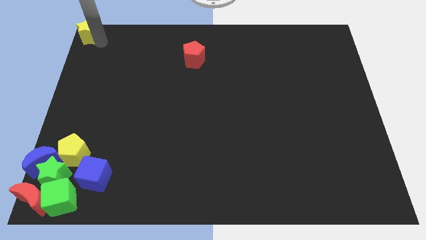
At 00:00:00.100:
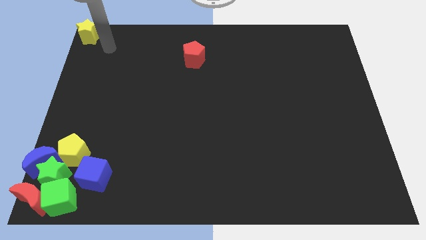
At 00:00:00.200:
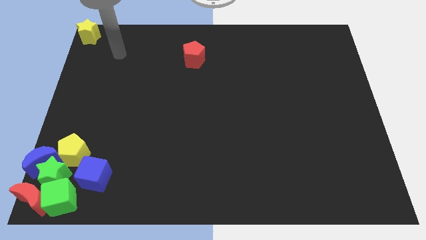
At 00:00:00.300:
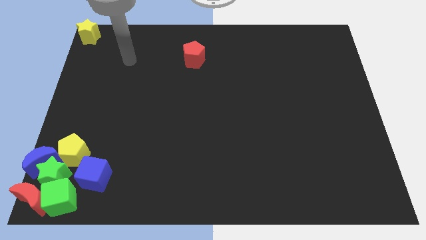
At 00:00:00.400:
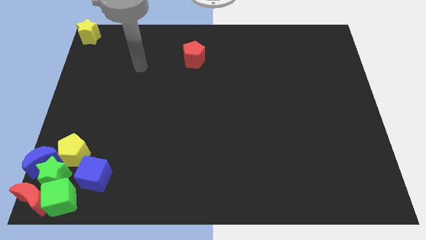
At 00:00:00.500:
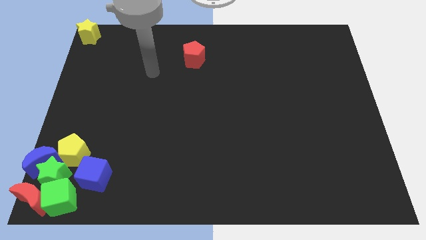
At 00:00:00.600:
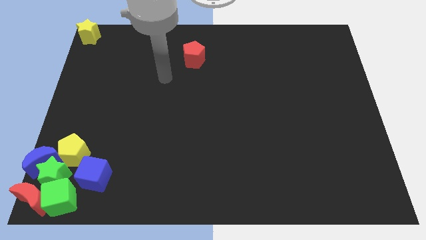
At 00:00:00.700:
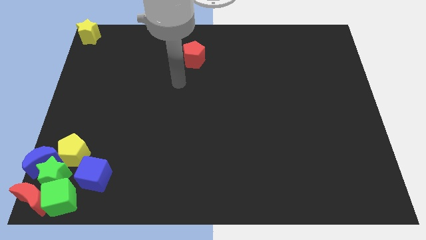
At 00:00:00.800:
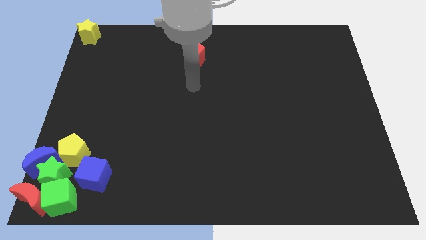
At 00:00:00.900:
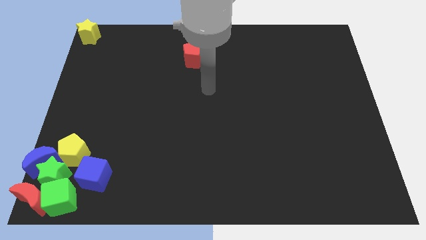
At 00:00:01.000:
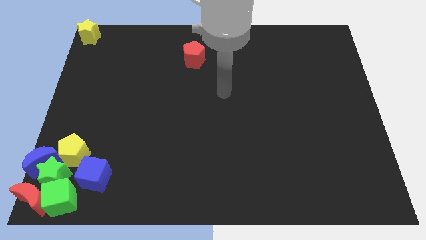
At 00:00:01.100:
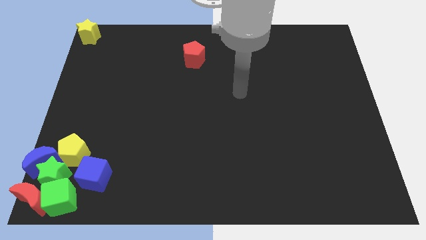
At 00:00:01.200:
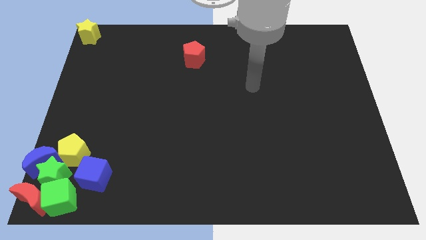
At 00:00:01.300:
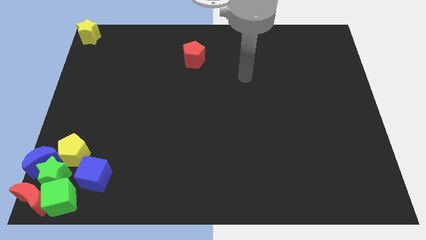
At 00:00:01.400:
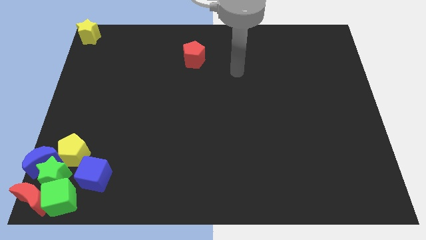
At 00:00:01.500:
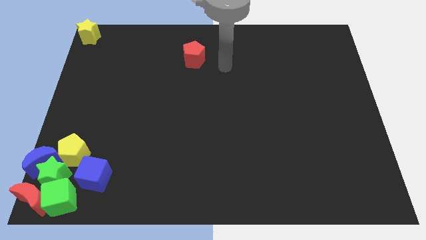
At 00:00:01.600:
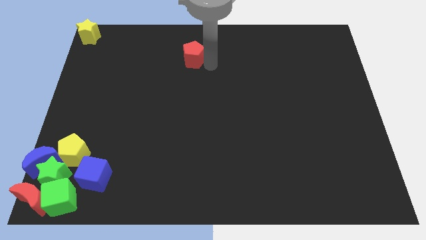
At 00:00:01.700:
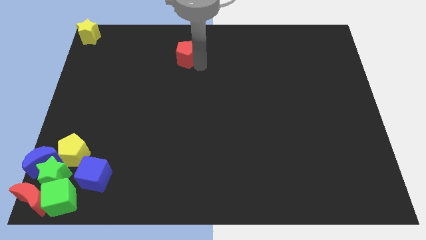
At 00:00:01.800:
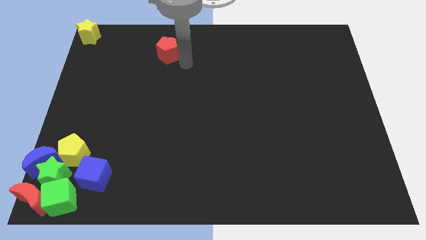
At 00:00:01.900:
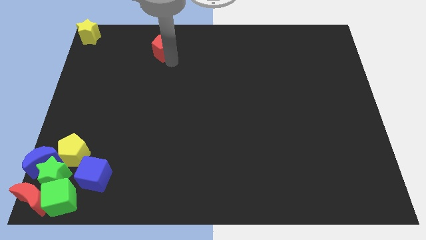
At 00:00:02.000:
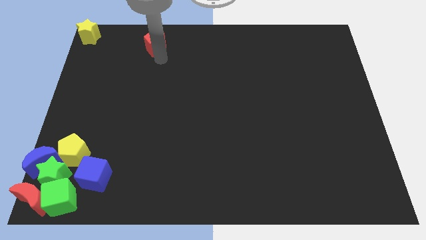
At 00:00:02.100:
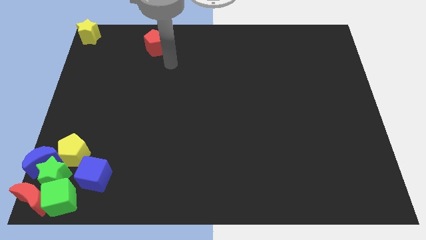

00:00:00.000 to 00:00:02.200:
move the arm away from the yellow star

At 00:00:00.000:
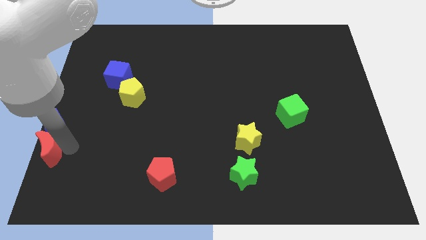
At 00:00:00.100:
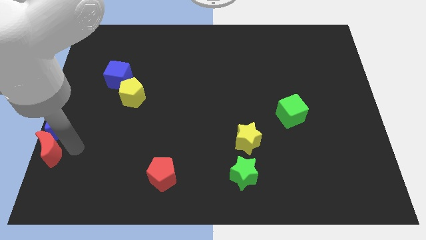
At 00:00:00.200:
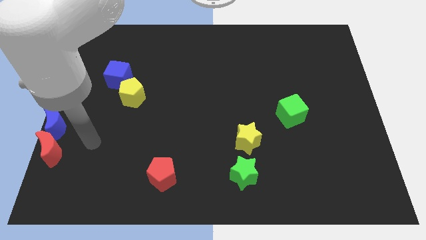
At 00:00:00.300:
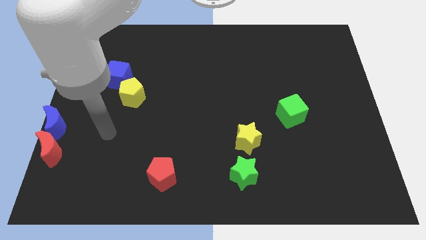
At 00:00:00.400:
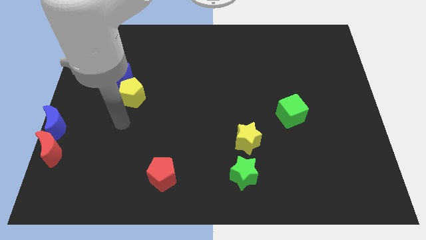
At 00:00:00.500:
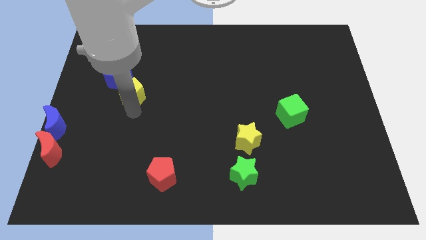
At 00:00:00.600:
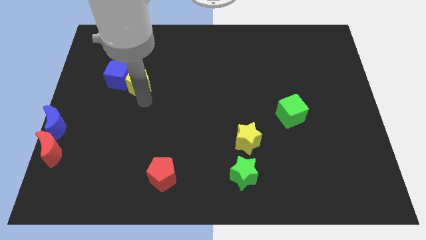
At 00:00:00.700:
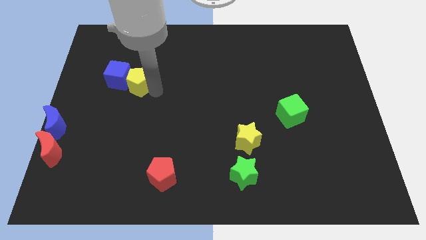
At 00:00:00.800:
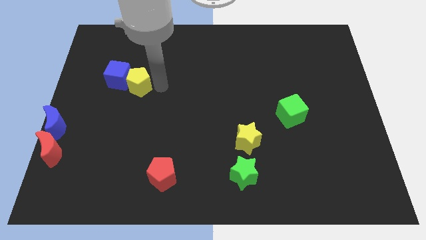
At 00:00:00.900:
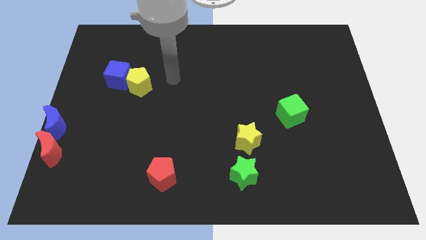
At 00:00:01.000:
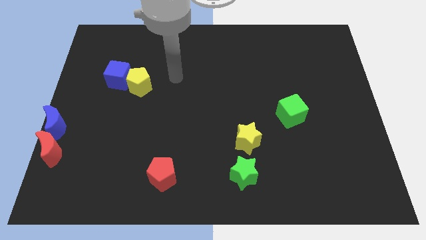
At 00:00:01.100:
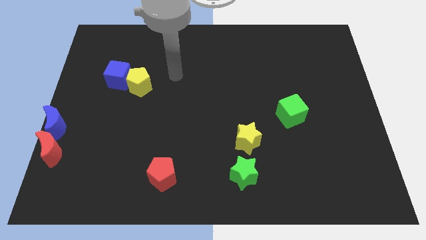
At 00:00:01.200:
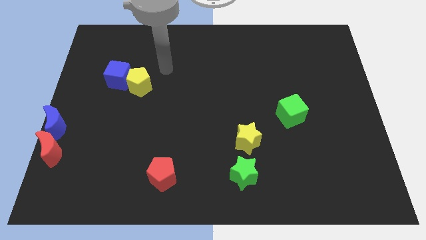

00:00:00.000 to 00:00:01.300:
push the yellow pentagon to the right of the blue cube

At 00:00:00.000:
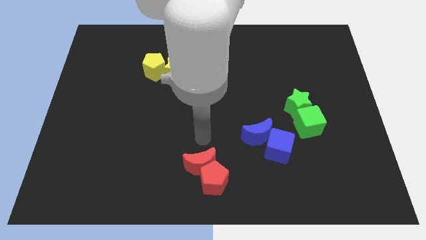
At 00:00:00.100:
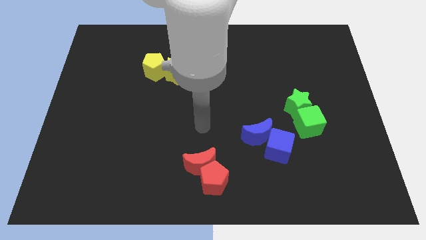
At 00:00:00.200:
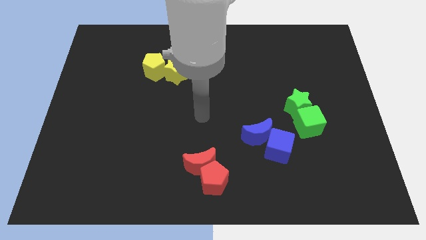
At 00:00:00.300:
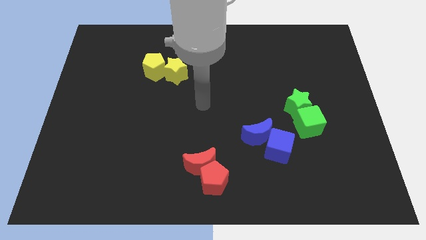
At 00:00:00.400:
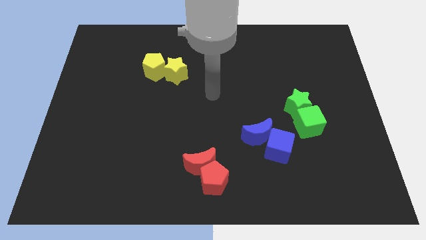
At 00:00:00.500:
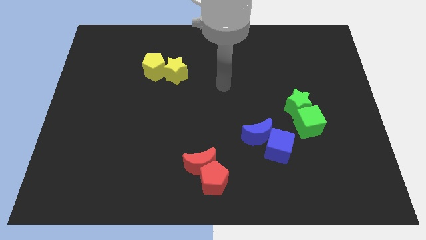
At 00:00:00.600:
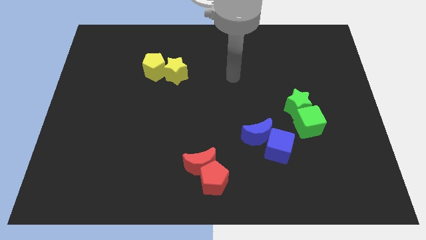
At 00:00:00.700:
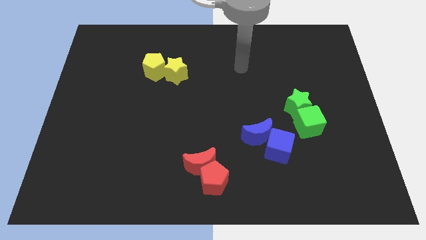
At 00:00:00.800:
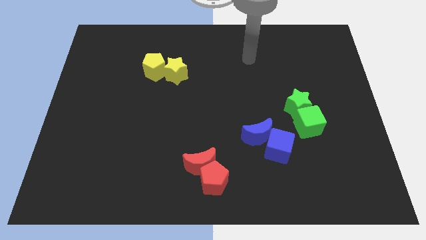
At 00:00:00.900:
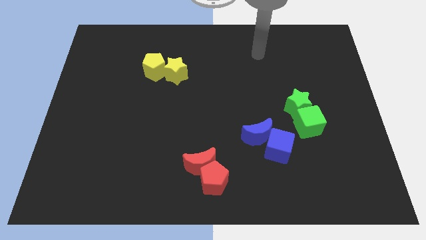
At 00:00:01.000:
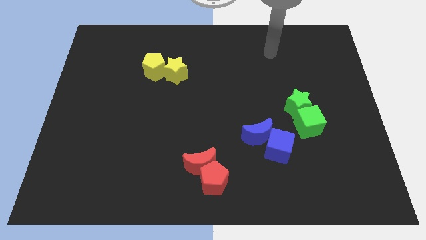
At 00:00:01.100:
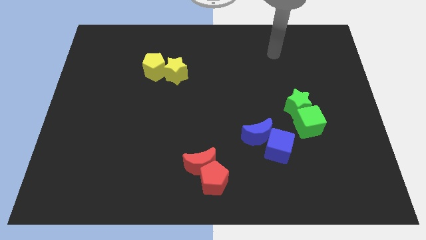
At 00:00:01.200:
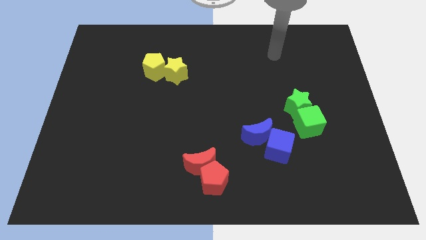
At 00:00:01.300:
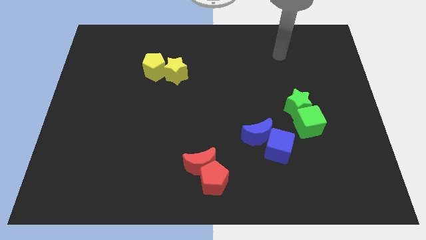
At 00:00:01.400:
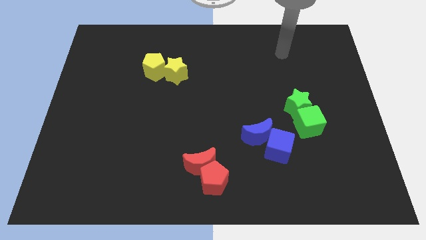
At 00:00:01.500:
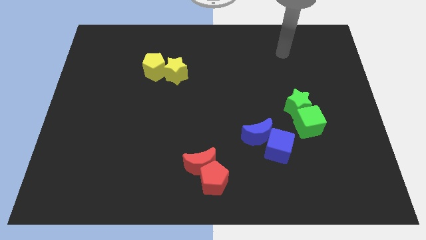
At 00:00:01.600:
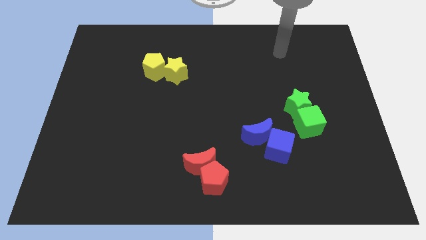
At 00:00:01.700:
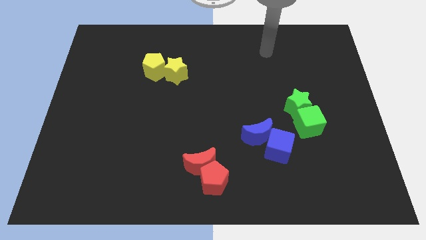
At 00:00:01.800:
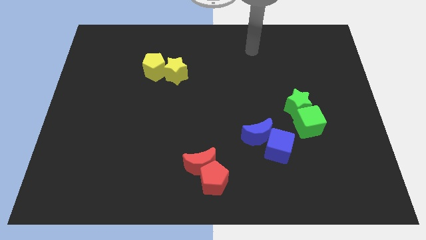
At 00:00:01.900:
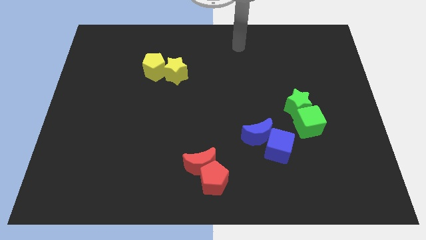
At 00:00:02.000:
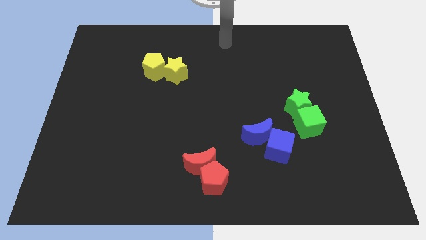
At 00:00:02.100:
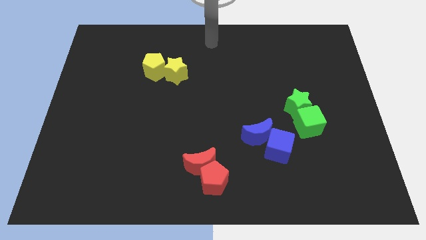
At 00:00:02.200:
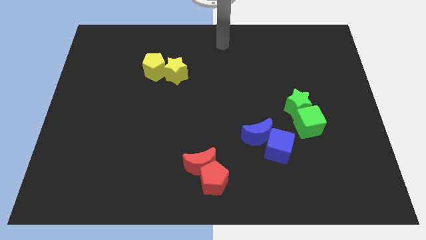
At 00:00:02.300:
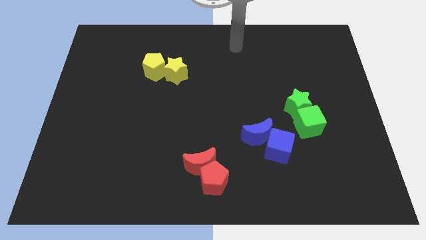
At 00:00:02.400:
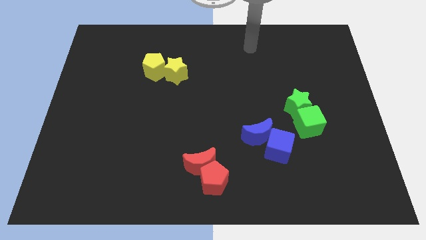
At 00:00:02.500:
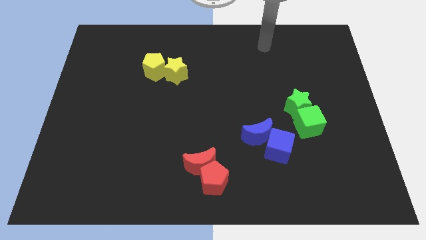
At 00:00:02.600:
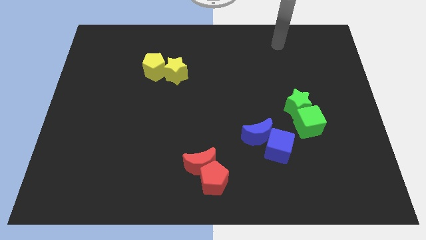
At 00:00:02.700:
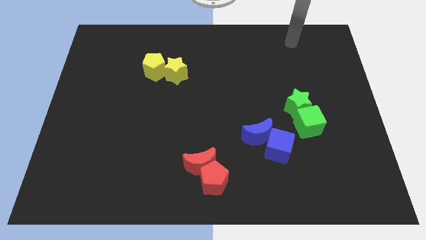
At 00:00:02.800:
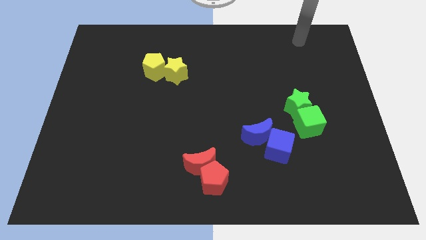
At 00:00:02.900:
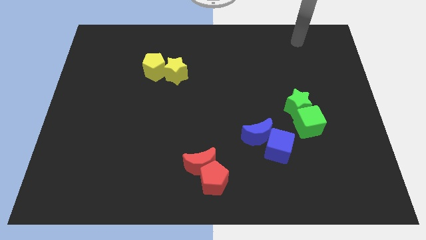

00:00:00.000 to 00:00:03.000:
point the arm towards the top right of the board

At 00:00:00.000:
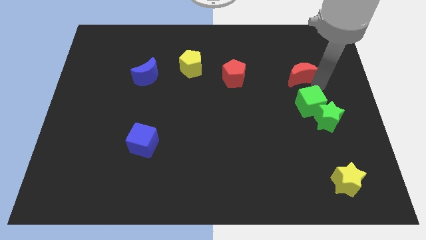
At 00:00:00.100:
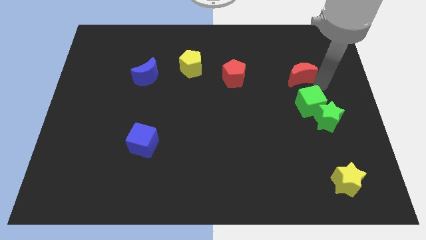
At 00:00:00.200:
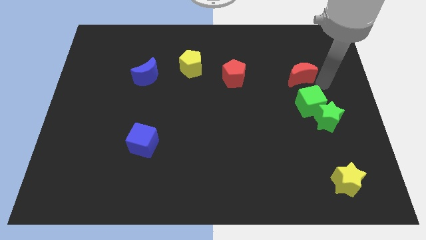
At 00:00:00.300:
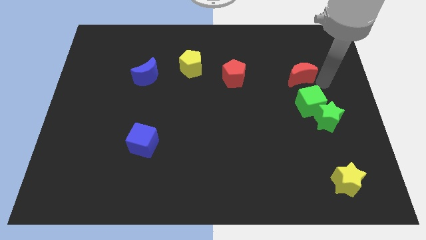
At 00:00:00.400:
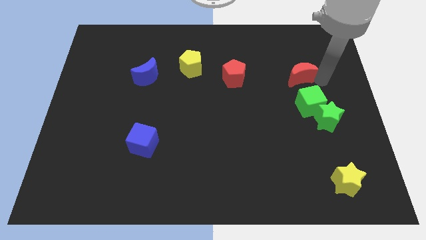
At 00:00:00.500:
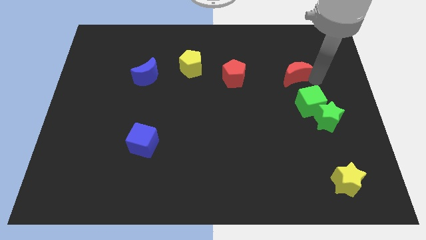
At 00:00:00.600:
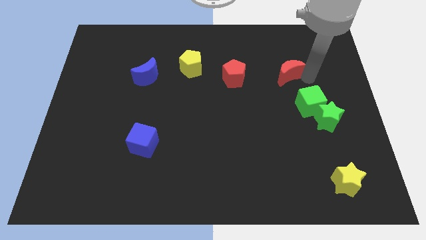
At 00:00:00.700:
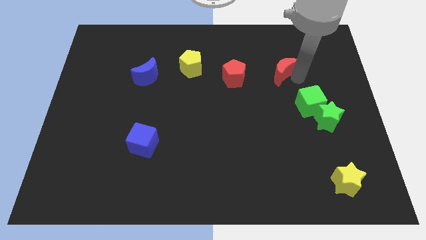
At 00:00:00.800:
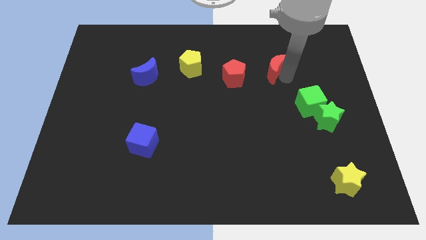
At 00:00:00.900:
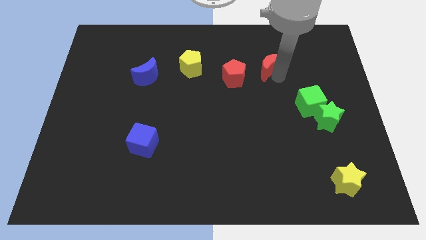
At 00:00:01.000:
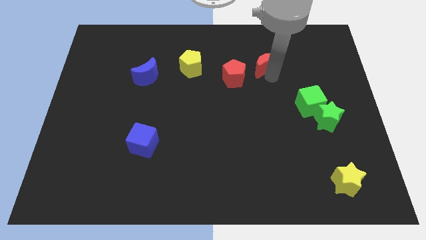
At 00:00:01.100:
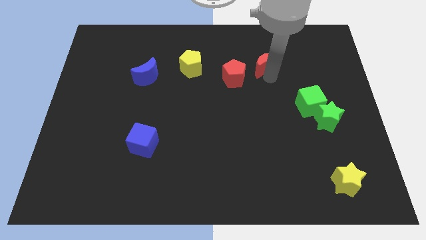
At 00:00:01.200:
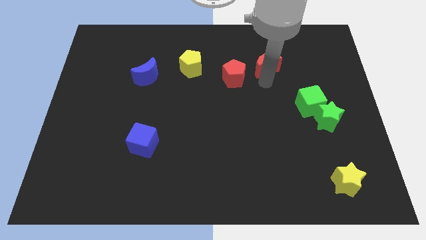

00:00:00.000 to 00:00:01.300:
move the red crescent slightly to the left

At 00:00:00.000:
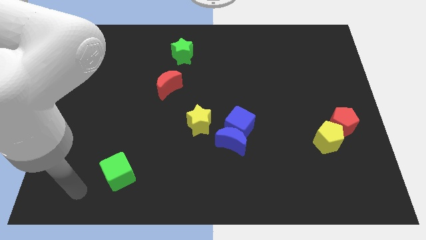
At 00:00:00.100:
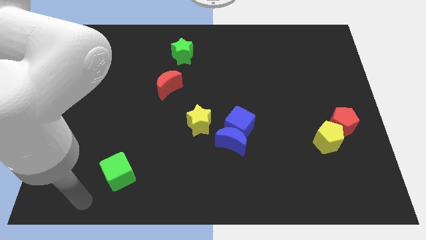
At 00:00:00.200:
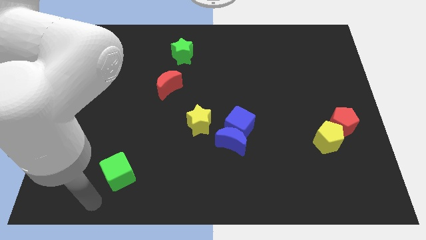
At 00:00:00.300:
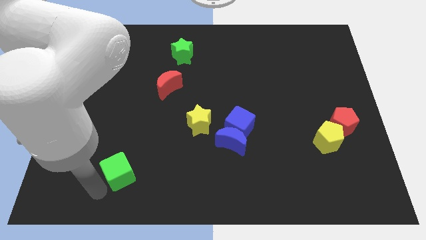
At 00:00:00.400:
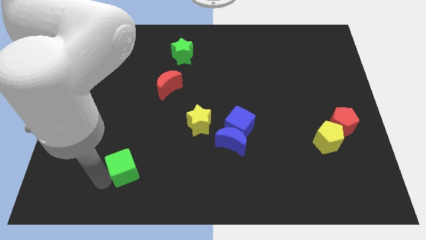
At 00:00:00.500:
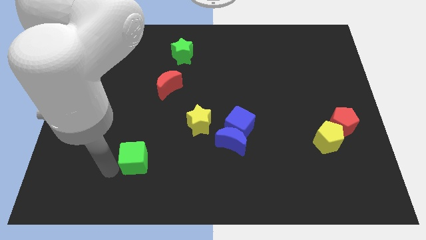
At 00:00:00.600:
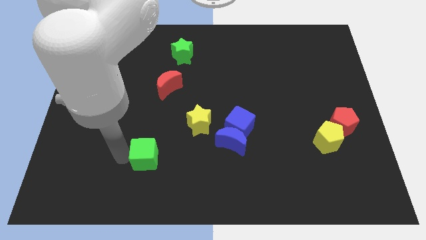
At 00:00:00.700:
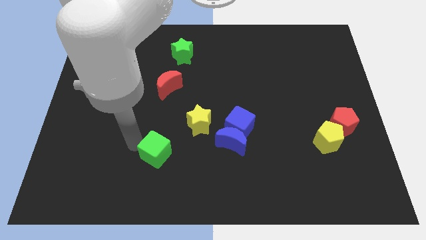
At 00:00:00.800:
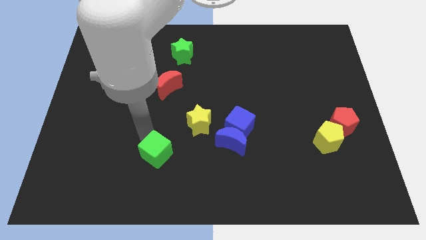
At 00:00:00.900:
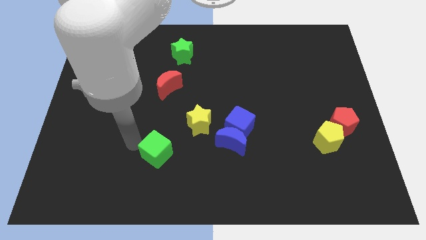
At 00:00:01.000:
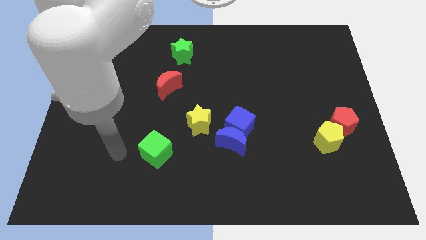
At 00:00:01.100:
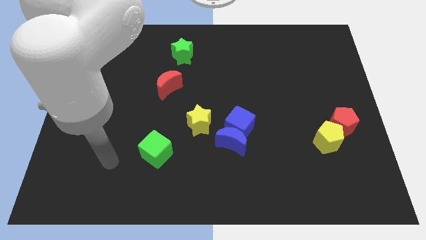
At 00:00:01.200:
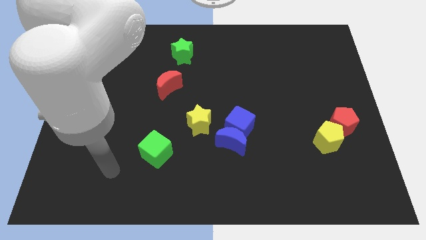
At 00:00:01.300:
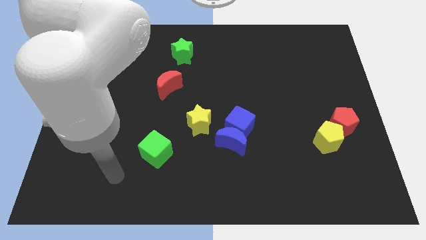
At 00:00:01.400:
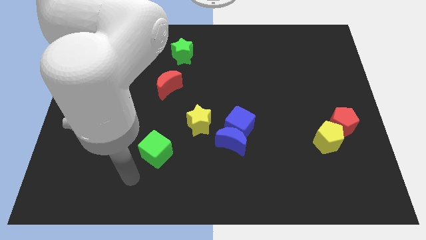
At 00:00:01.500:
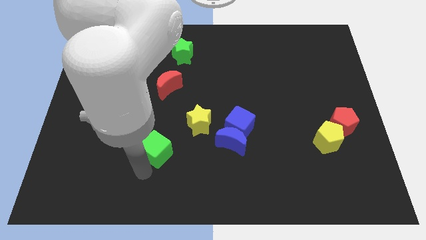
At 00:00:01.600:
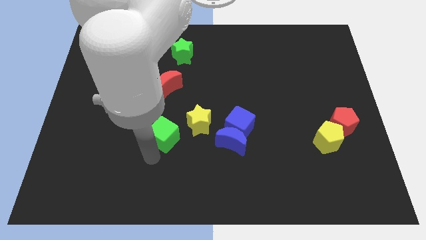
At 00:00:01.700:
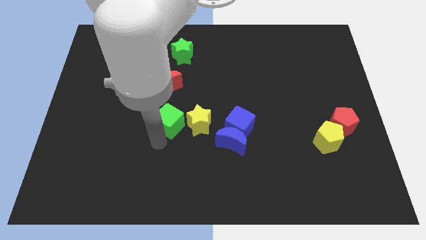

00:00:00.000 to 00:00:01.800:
push the green cube to the left of the yellow star
